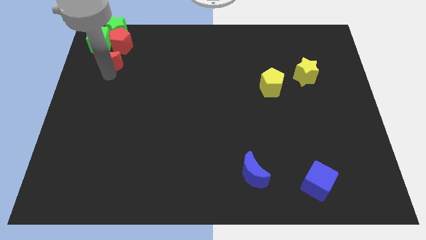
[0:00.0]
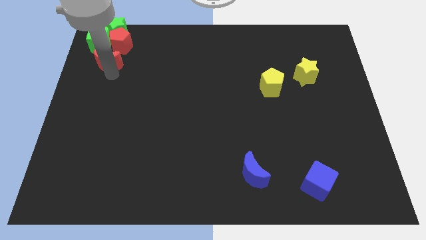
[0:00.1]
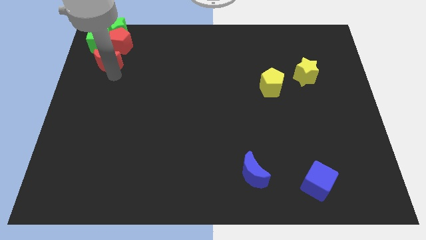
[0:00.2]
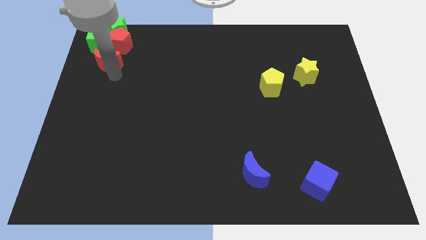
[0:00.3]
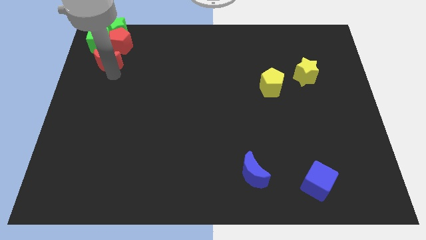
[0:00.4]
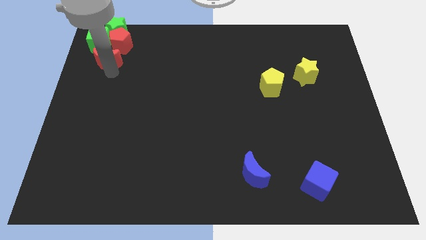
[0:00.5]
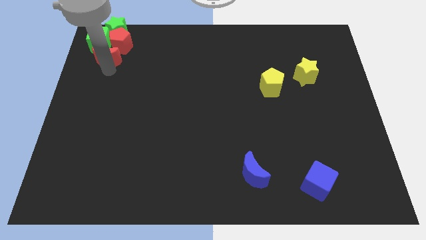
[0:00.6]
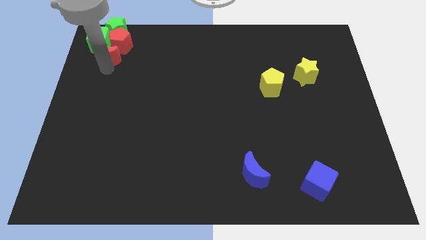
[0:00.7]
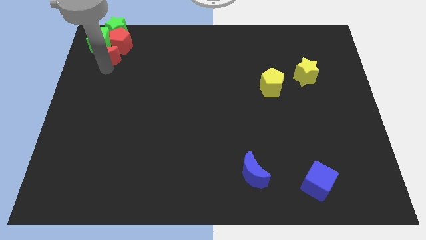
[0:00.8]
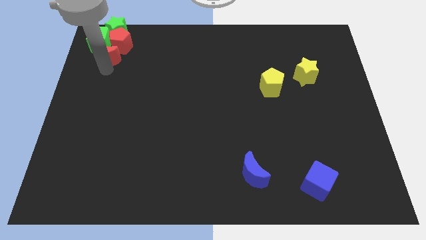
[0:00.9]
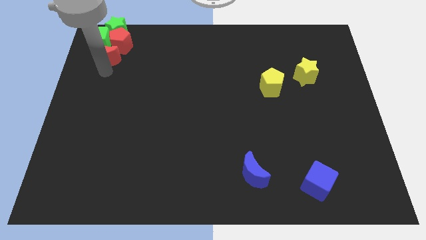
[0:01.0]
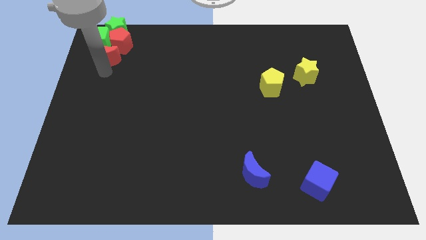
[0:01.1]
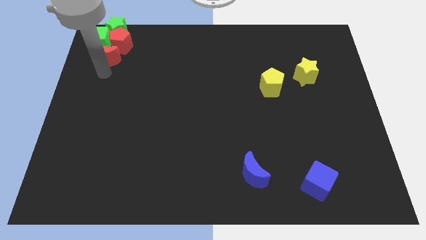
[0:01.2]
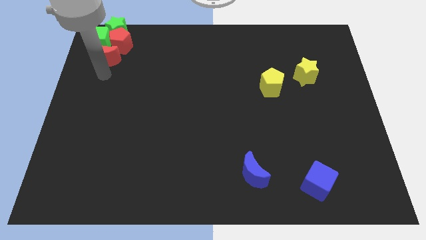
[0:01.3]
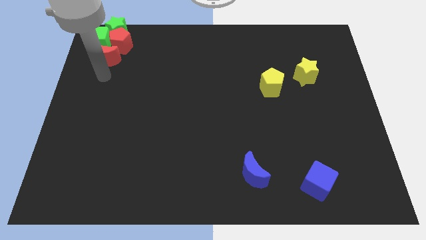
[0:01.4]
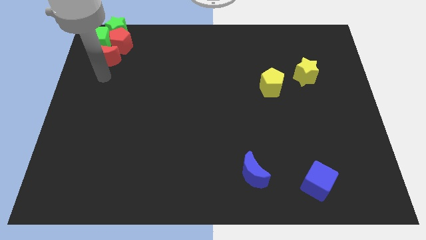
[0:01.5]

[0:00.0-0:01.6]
push the red moon into the red pentagon and green cube

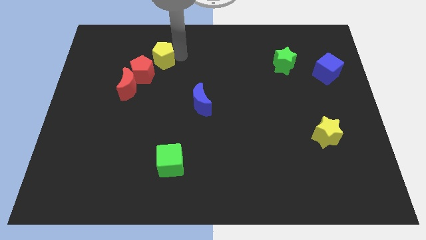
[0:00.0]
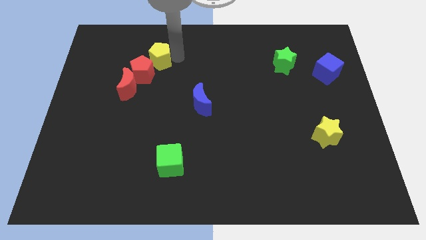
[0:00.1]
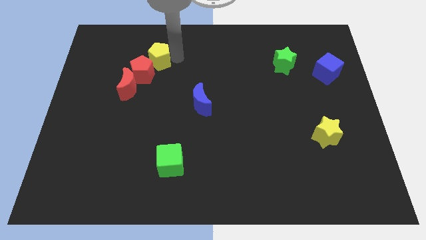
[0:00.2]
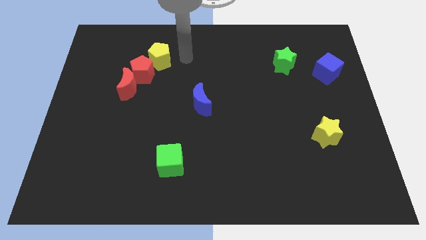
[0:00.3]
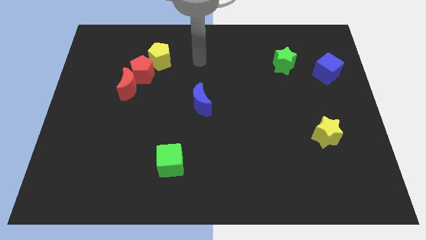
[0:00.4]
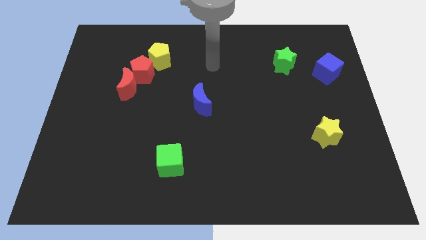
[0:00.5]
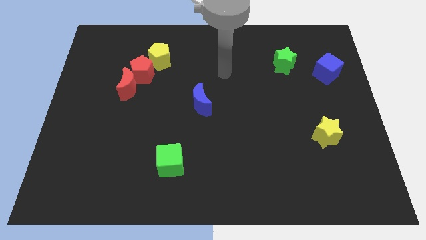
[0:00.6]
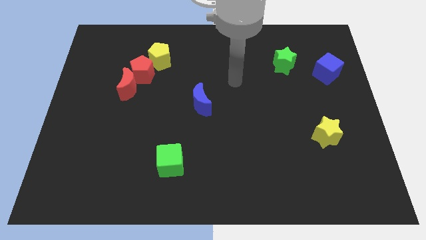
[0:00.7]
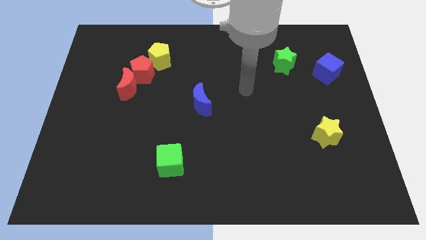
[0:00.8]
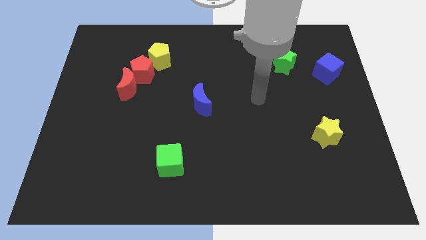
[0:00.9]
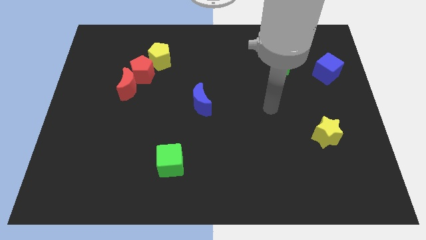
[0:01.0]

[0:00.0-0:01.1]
push the yellow pentagon close to the red pentagon

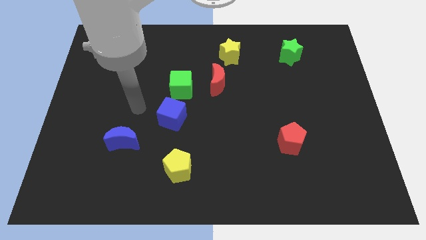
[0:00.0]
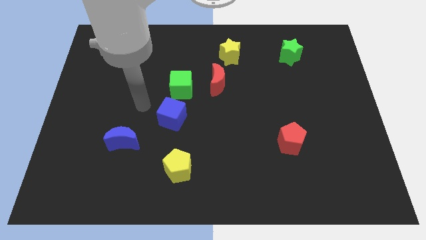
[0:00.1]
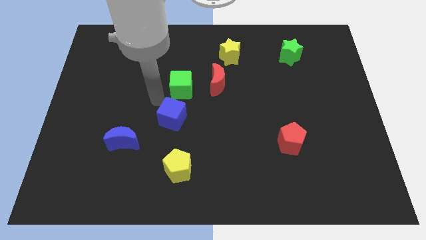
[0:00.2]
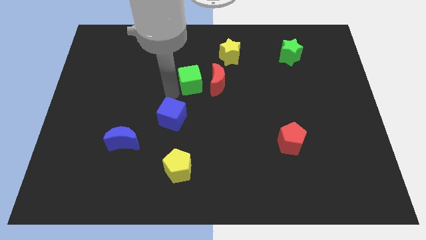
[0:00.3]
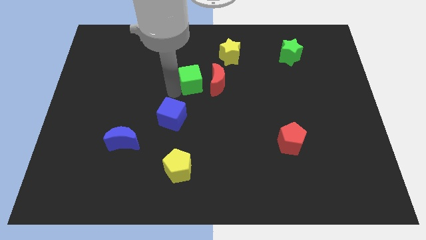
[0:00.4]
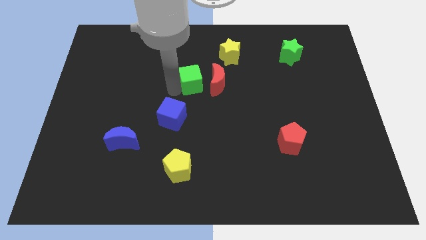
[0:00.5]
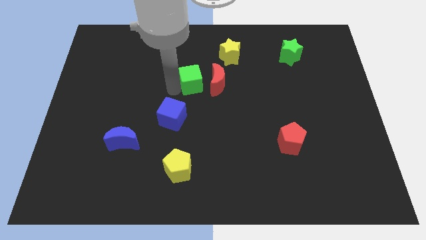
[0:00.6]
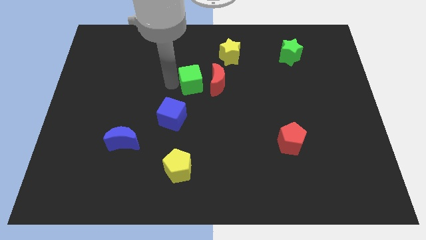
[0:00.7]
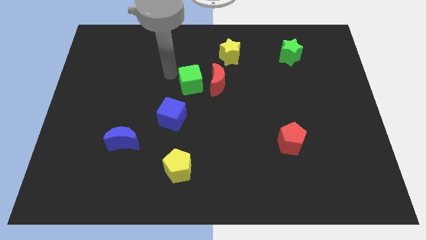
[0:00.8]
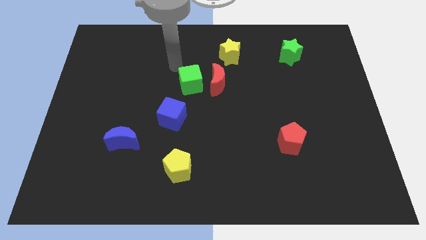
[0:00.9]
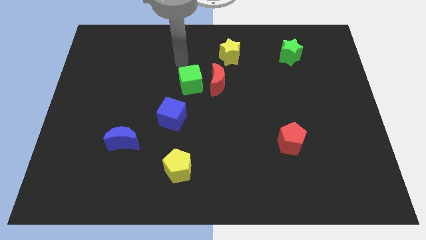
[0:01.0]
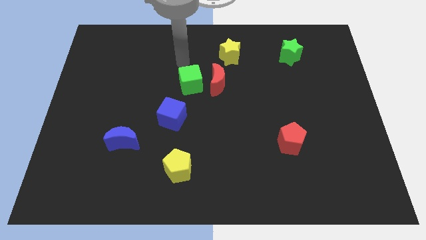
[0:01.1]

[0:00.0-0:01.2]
place the green cube left to the red crescent

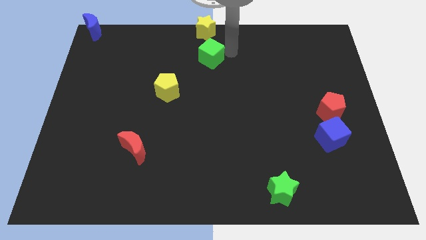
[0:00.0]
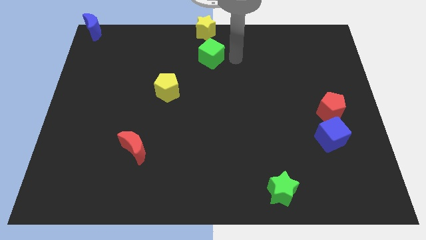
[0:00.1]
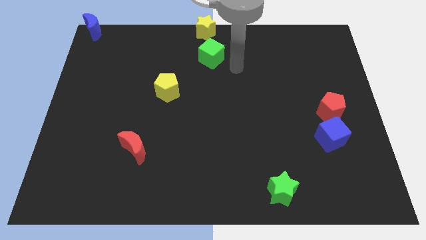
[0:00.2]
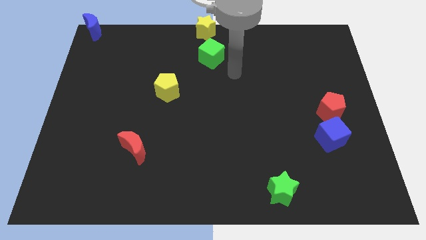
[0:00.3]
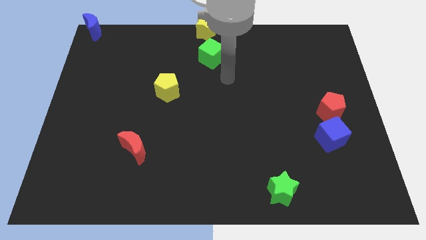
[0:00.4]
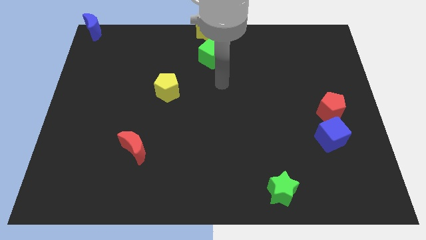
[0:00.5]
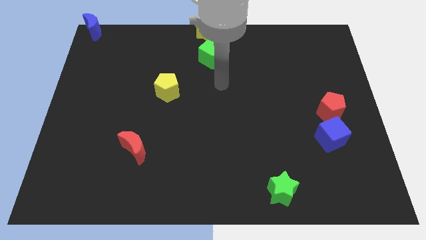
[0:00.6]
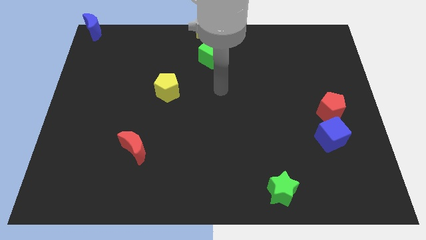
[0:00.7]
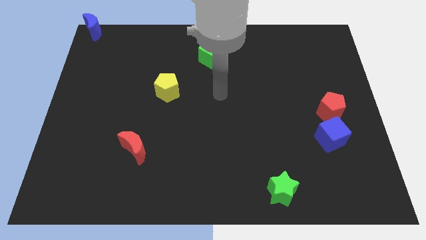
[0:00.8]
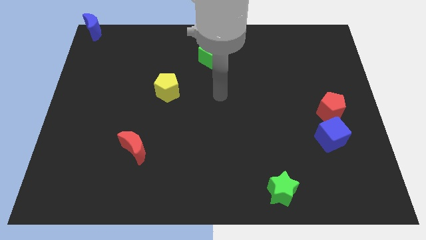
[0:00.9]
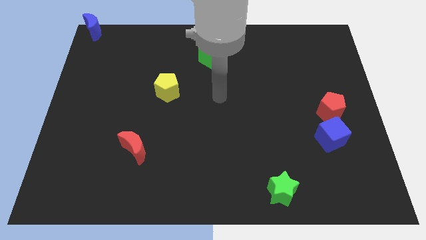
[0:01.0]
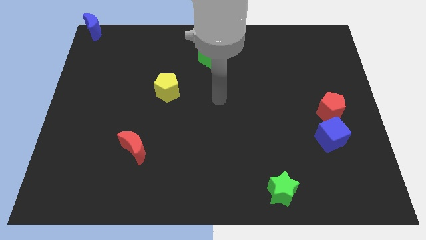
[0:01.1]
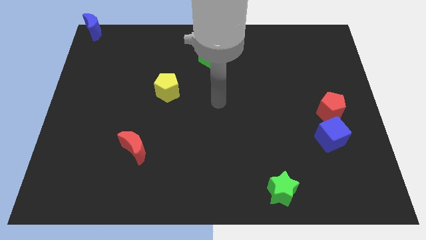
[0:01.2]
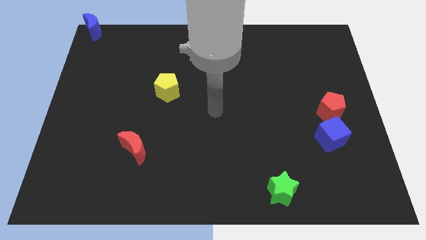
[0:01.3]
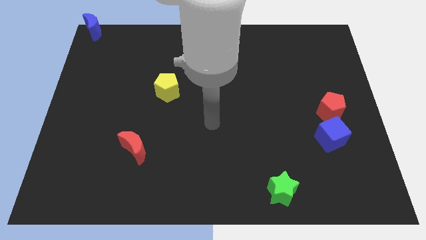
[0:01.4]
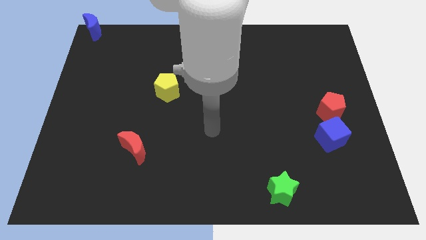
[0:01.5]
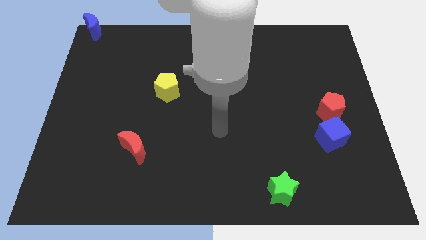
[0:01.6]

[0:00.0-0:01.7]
move your arm away from the right side of the green cube

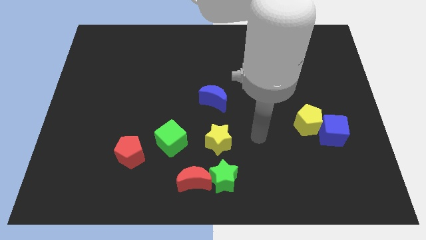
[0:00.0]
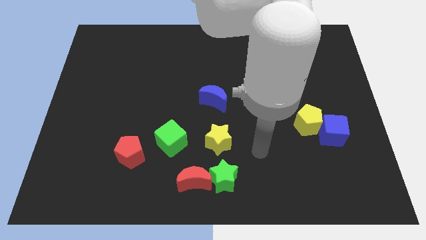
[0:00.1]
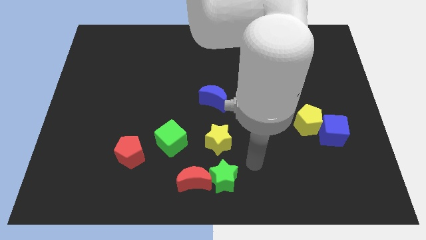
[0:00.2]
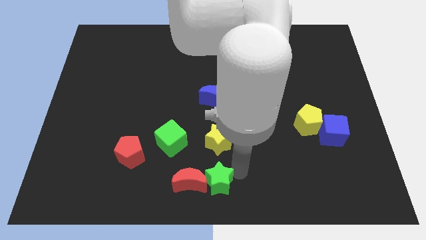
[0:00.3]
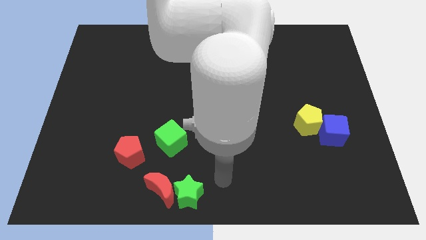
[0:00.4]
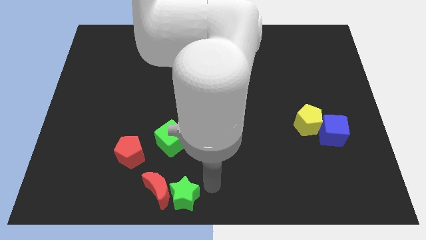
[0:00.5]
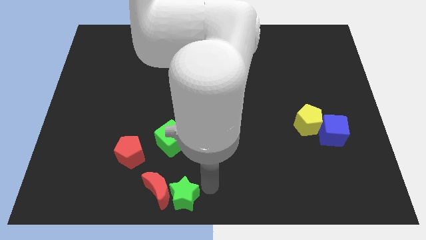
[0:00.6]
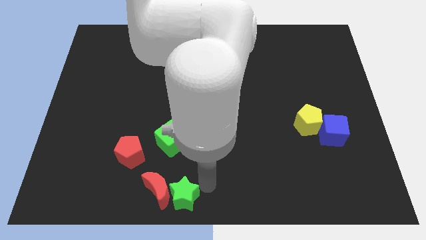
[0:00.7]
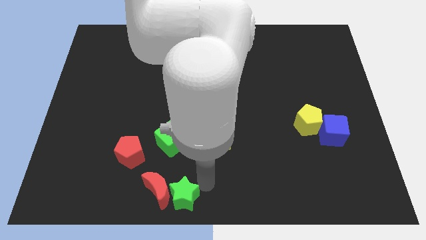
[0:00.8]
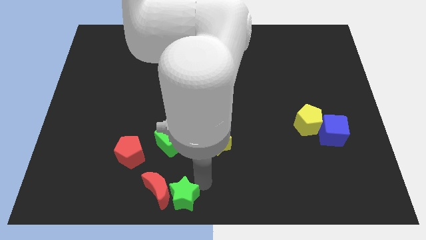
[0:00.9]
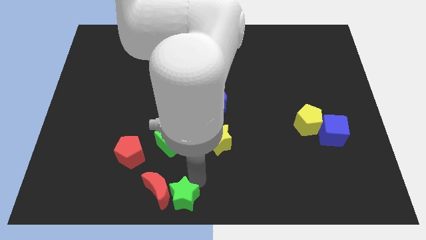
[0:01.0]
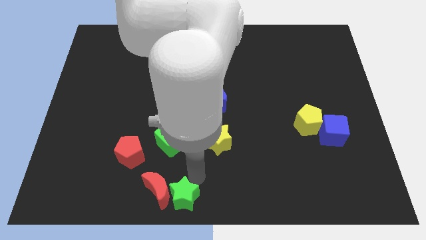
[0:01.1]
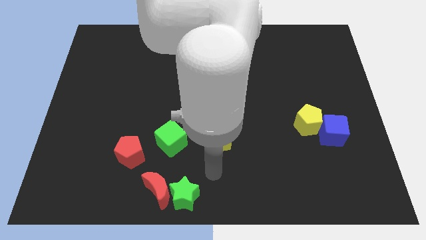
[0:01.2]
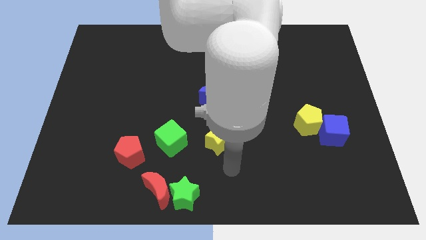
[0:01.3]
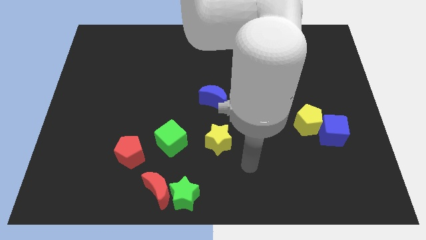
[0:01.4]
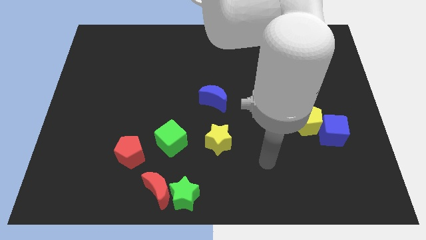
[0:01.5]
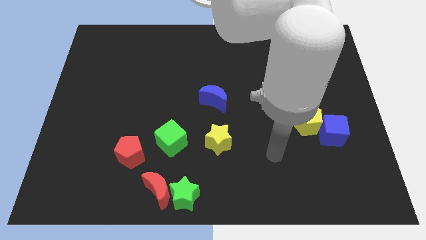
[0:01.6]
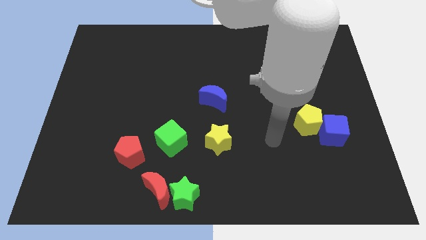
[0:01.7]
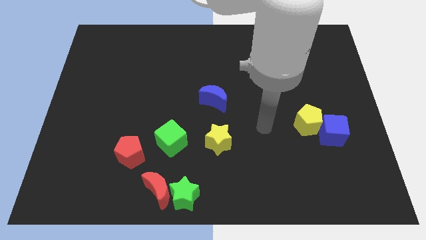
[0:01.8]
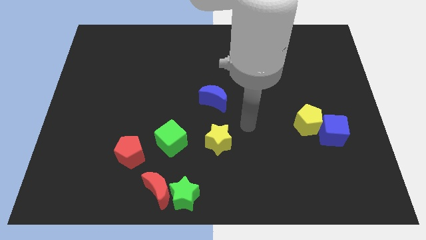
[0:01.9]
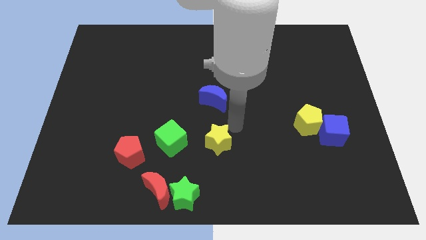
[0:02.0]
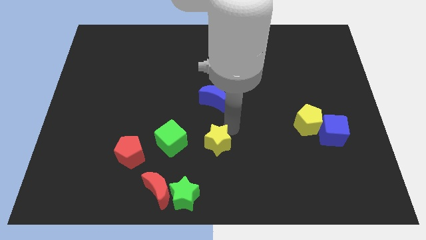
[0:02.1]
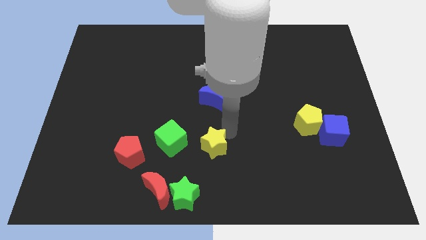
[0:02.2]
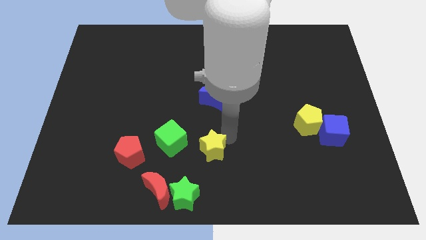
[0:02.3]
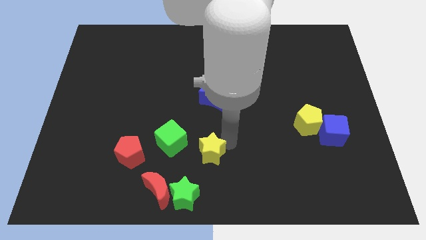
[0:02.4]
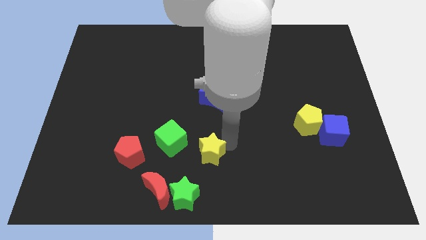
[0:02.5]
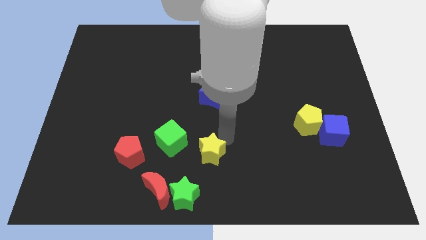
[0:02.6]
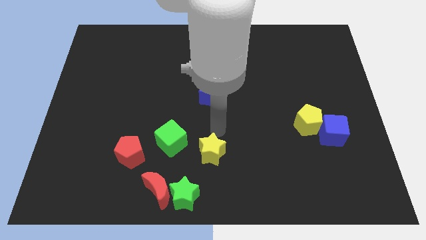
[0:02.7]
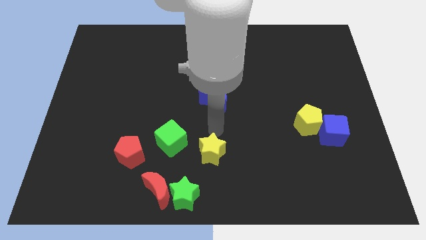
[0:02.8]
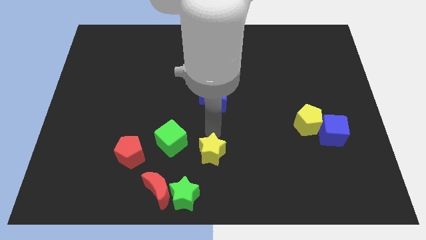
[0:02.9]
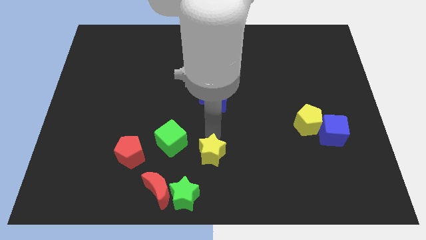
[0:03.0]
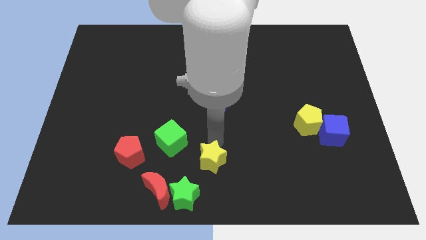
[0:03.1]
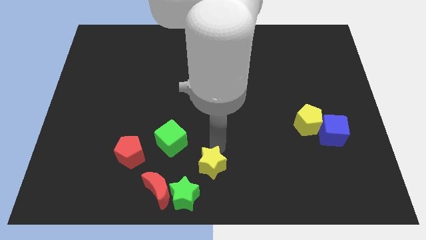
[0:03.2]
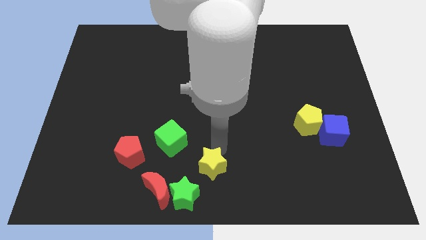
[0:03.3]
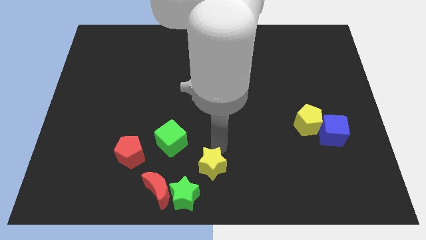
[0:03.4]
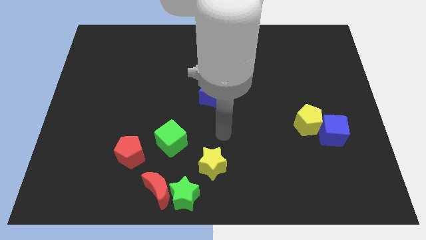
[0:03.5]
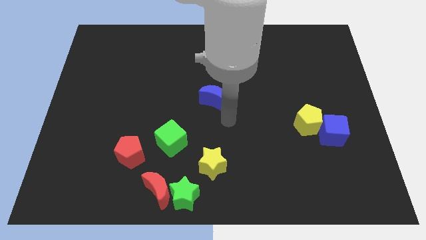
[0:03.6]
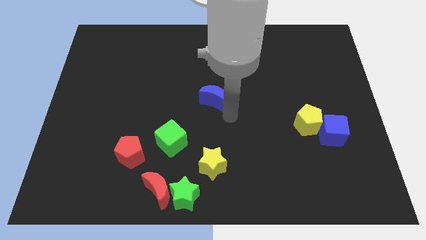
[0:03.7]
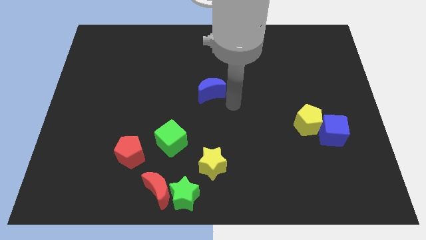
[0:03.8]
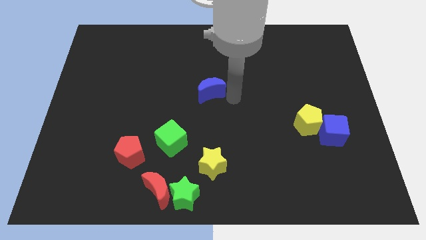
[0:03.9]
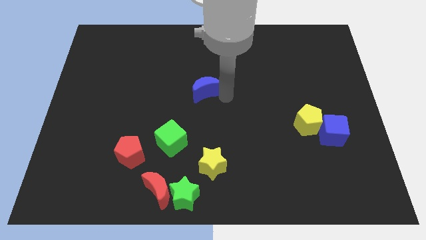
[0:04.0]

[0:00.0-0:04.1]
push green and yellow stars towards bottom center
